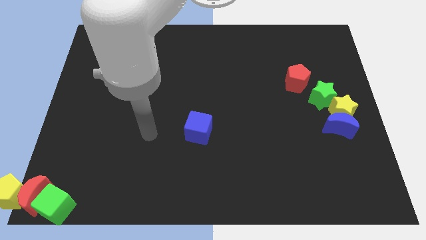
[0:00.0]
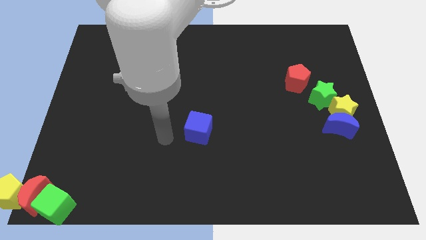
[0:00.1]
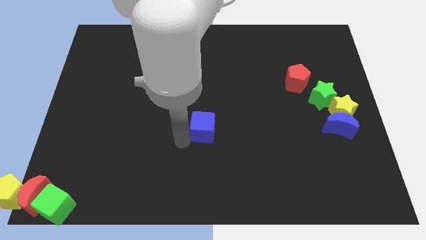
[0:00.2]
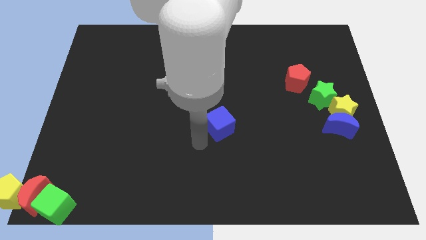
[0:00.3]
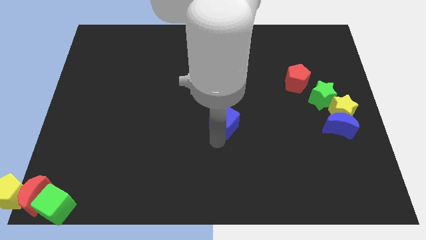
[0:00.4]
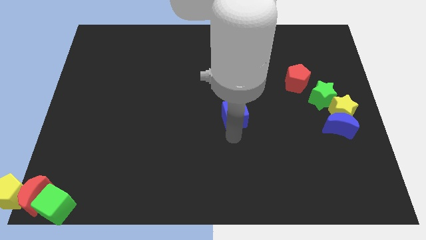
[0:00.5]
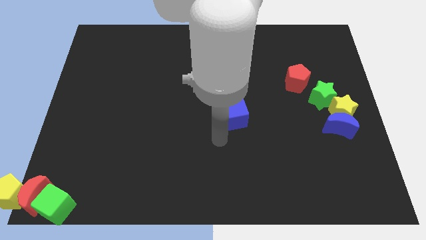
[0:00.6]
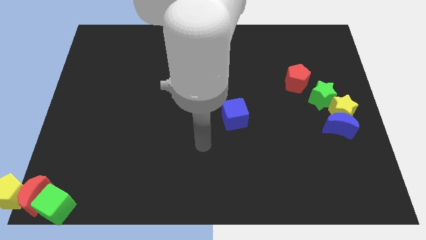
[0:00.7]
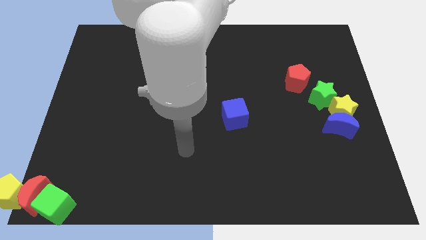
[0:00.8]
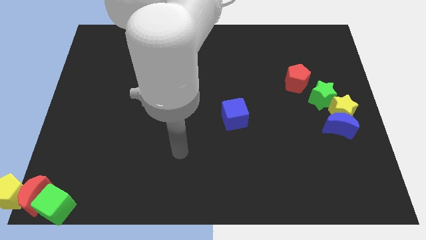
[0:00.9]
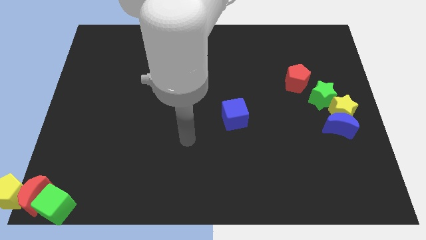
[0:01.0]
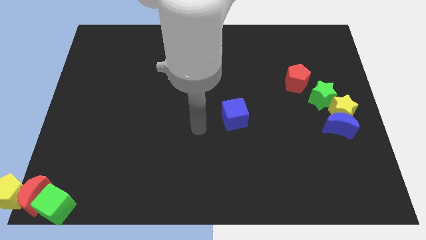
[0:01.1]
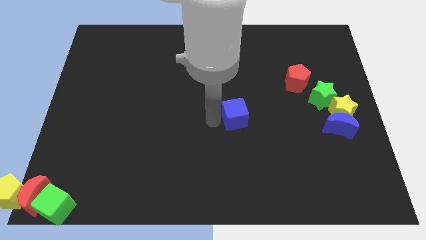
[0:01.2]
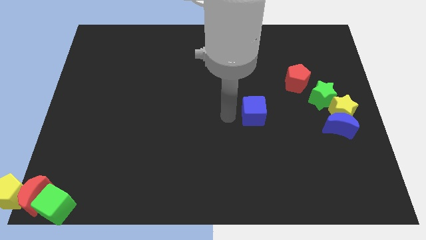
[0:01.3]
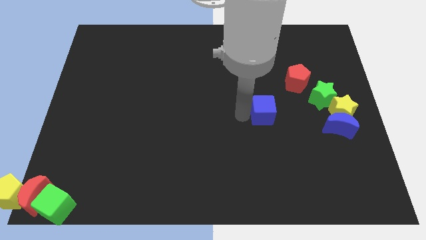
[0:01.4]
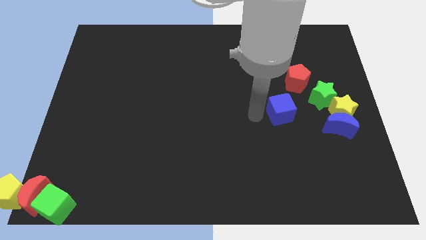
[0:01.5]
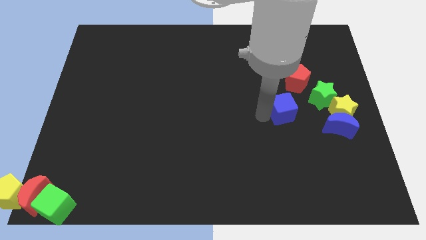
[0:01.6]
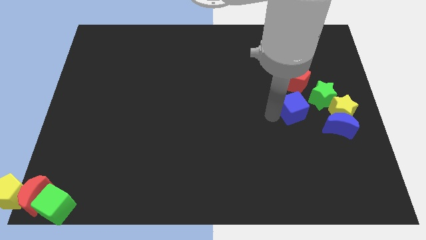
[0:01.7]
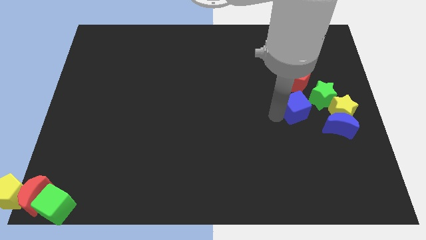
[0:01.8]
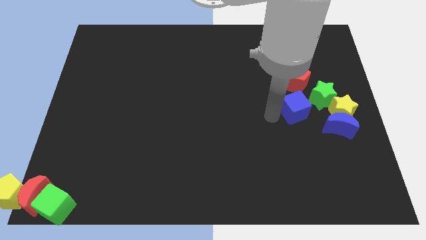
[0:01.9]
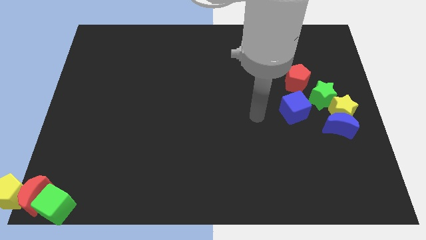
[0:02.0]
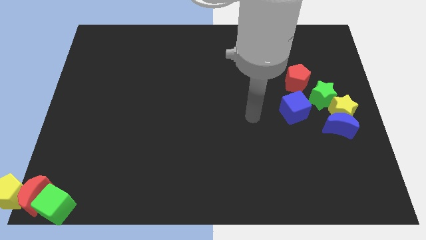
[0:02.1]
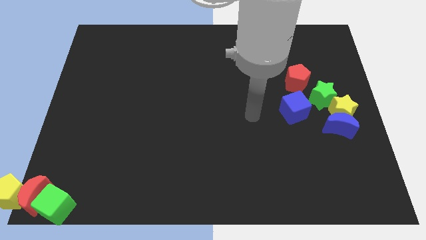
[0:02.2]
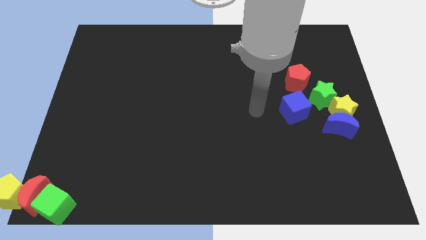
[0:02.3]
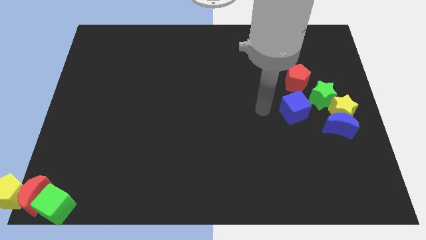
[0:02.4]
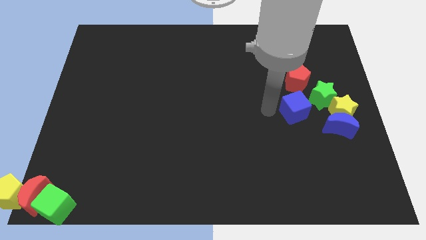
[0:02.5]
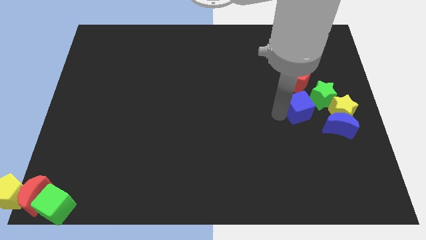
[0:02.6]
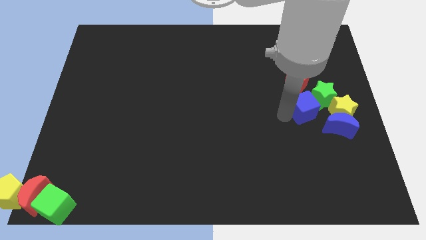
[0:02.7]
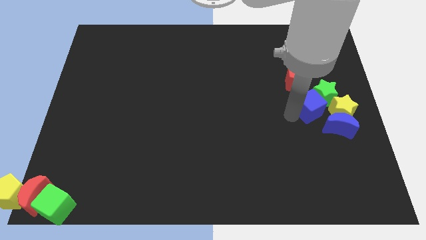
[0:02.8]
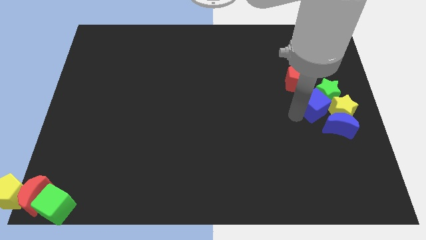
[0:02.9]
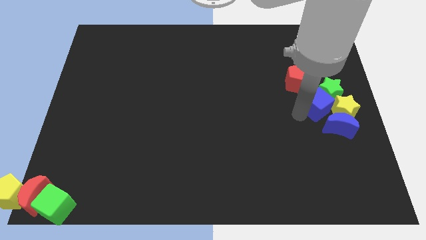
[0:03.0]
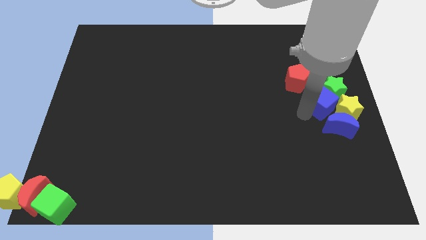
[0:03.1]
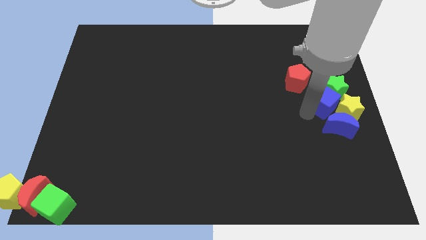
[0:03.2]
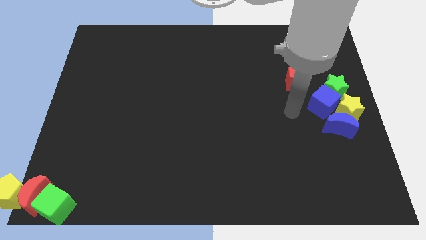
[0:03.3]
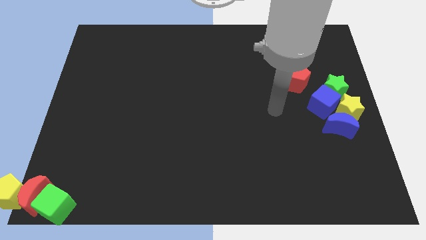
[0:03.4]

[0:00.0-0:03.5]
push the blue cube to the bottom right of the red pentagon

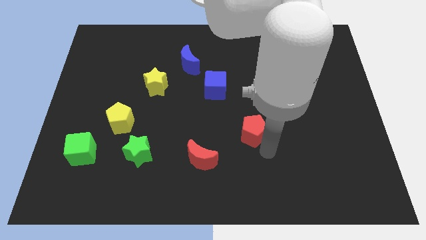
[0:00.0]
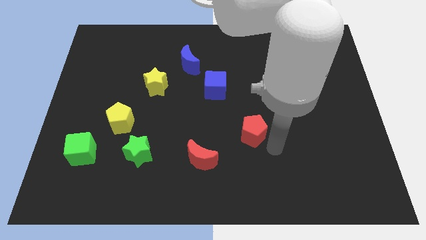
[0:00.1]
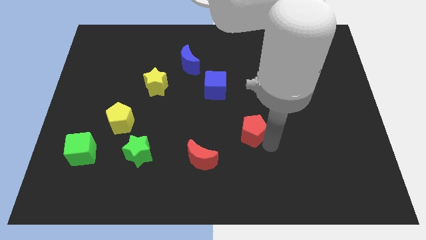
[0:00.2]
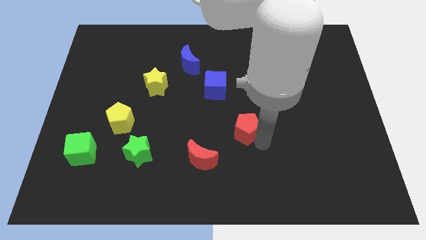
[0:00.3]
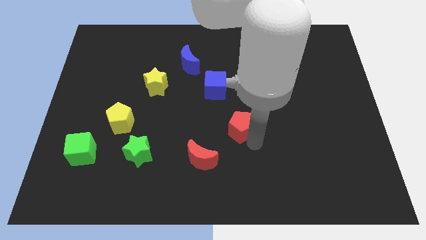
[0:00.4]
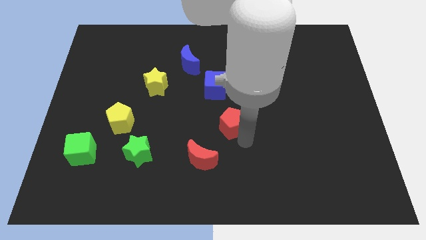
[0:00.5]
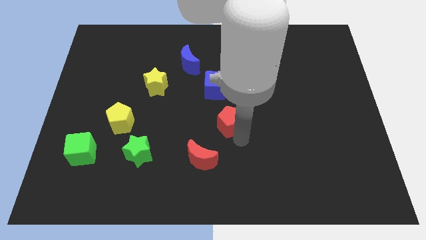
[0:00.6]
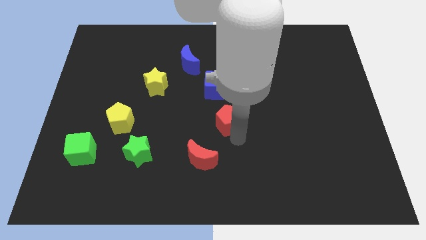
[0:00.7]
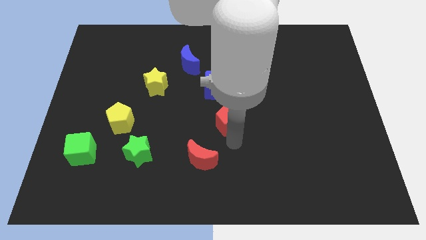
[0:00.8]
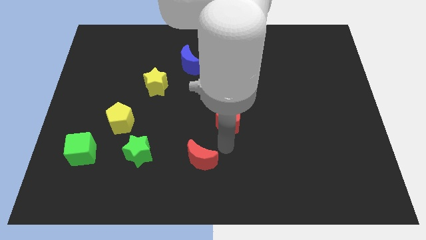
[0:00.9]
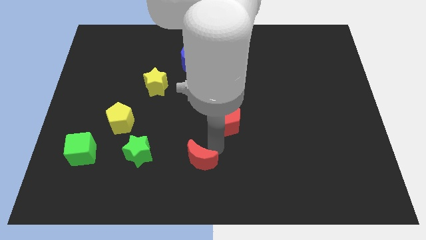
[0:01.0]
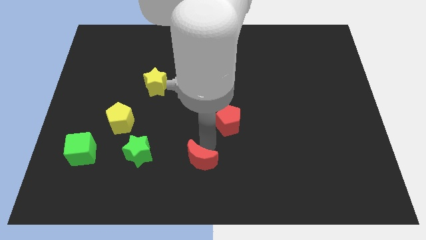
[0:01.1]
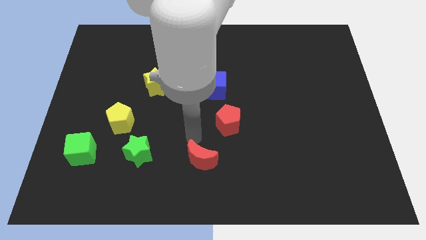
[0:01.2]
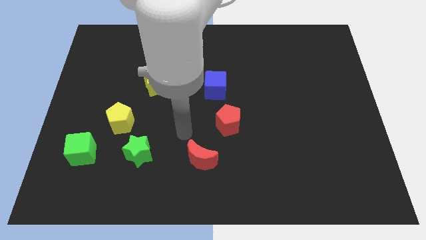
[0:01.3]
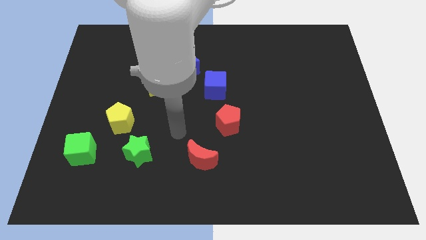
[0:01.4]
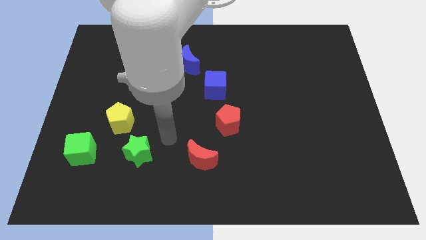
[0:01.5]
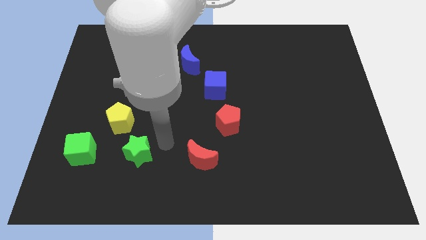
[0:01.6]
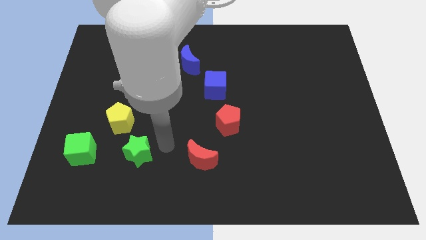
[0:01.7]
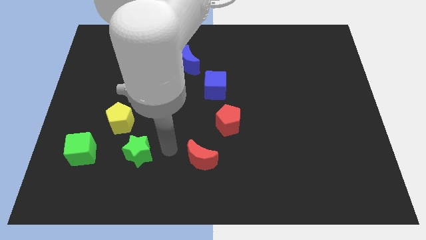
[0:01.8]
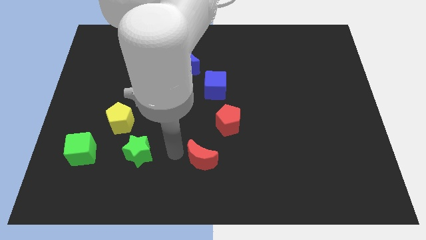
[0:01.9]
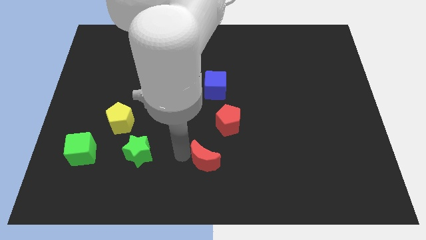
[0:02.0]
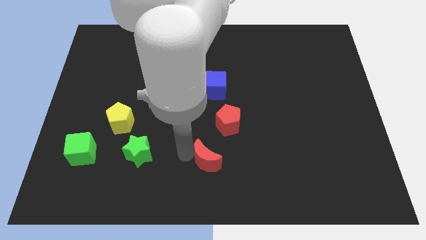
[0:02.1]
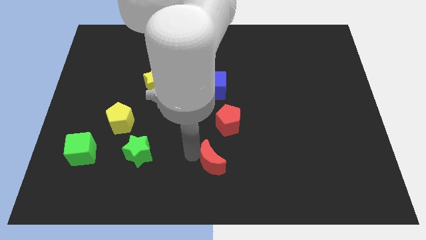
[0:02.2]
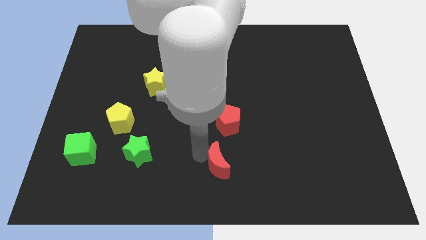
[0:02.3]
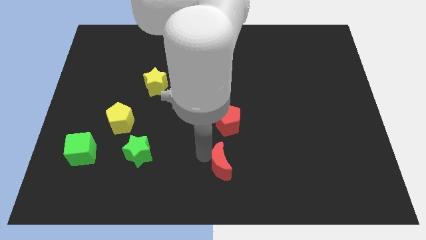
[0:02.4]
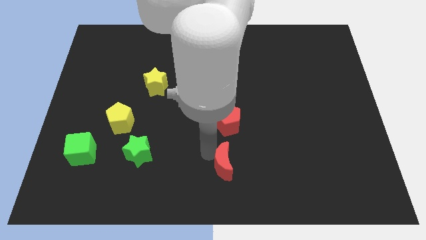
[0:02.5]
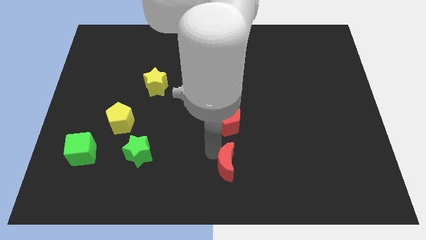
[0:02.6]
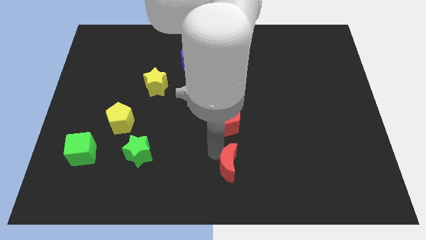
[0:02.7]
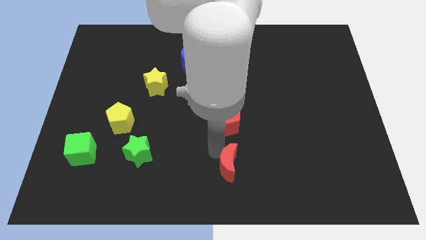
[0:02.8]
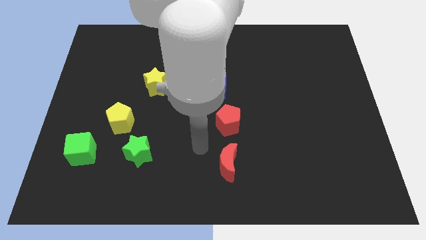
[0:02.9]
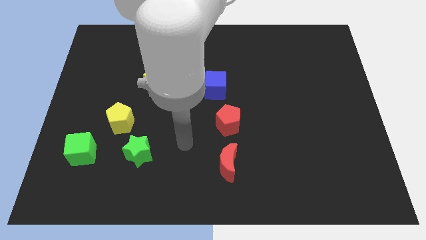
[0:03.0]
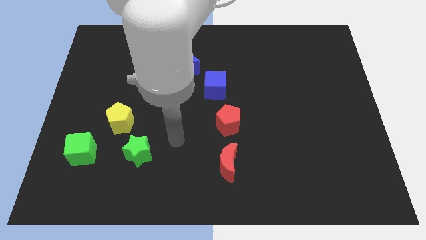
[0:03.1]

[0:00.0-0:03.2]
move the red moon below the red pentagon

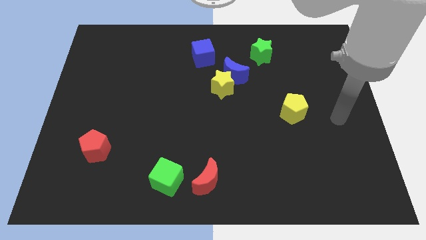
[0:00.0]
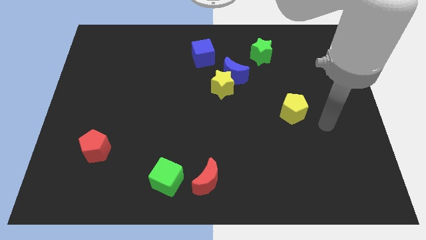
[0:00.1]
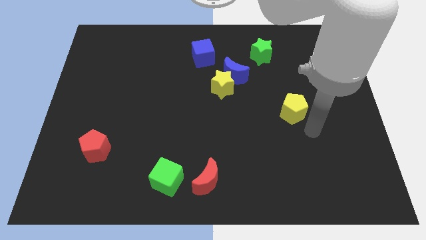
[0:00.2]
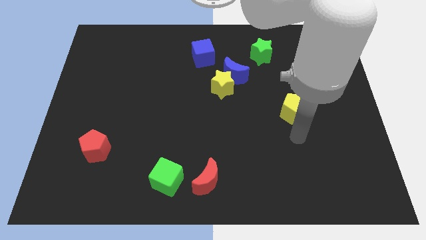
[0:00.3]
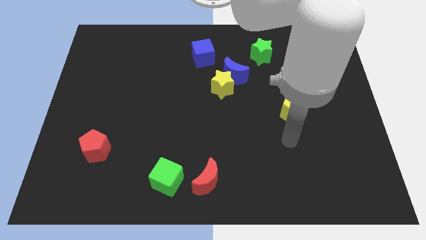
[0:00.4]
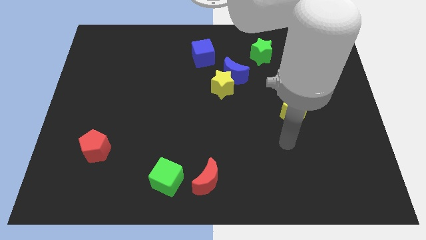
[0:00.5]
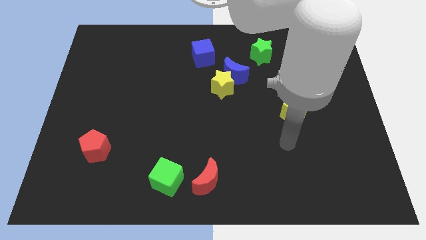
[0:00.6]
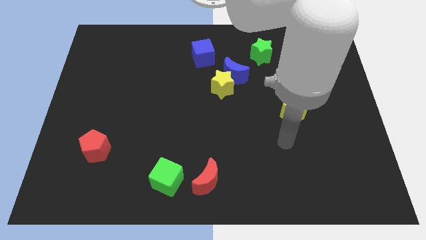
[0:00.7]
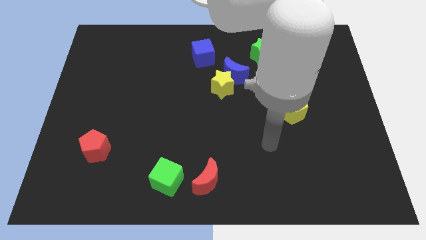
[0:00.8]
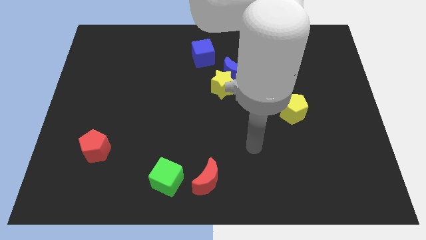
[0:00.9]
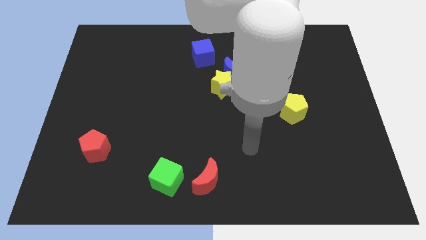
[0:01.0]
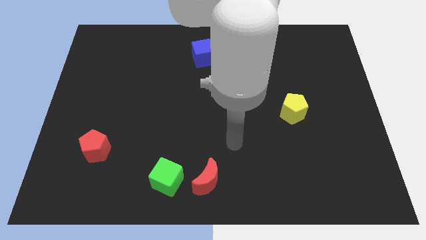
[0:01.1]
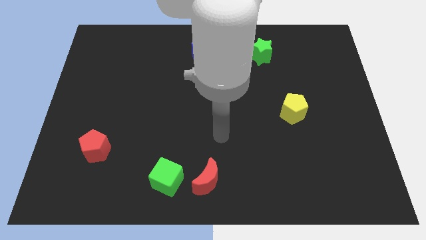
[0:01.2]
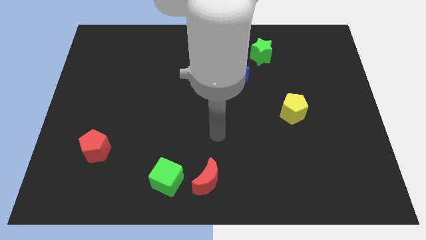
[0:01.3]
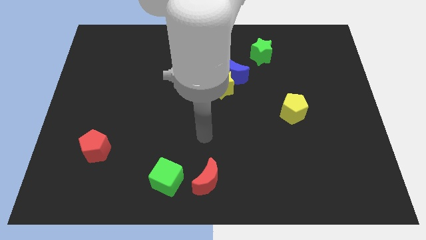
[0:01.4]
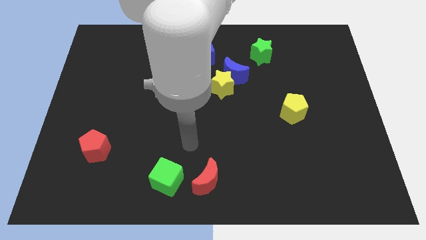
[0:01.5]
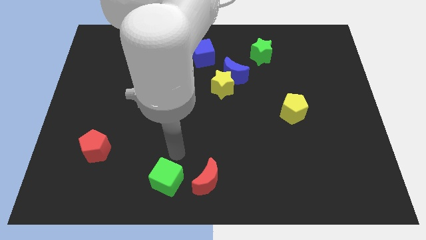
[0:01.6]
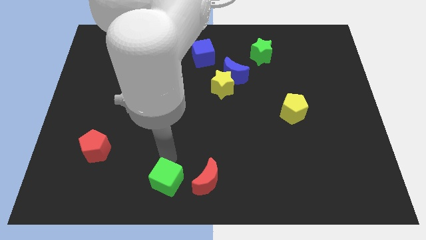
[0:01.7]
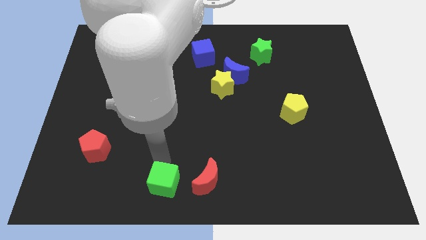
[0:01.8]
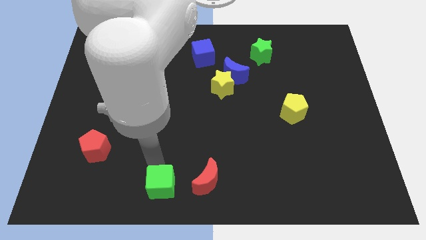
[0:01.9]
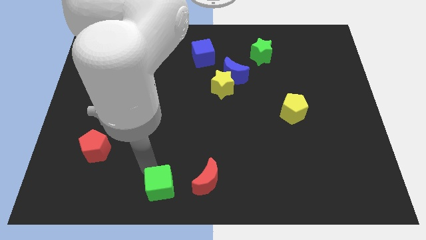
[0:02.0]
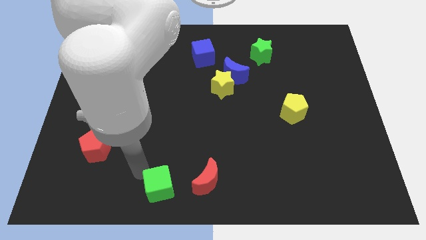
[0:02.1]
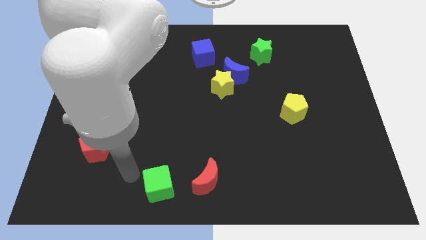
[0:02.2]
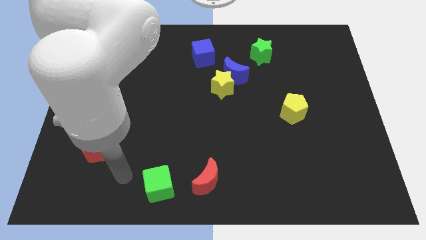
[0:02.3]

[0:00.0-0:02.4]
slightly push the green cube towards the bottom center of the board
